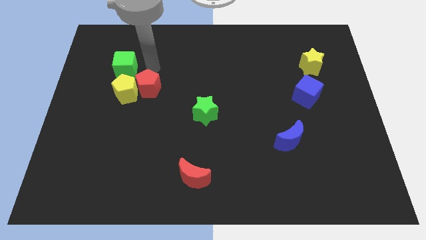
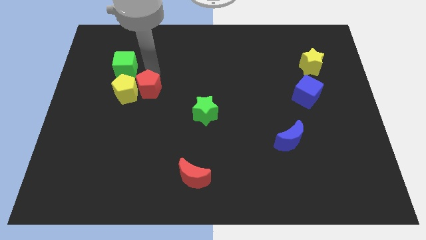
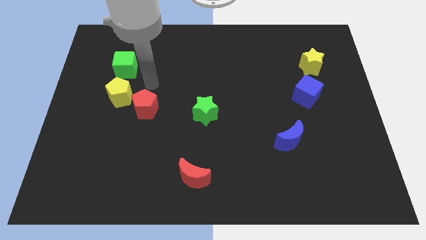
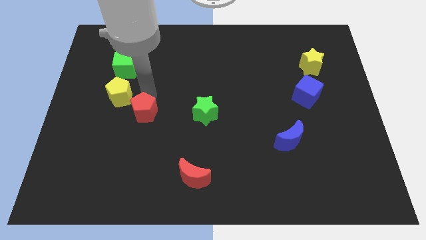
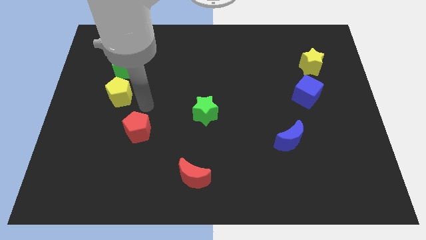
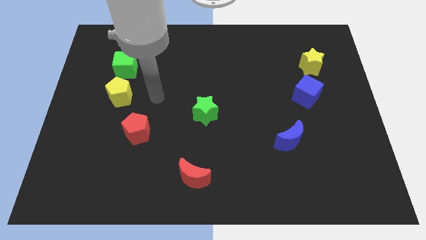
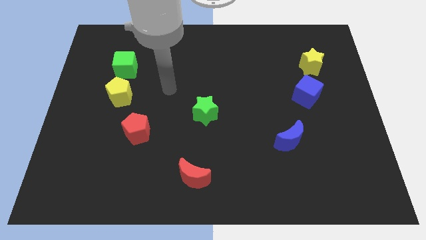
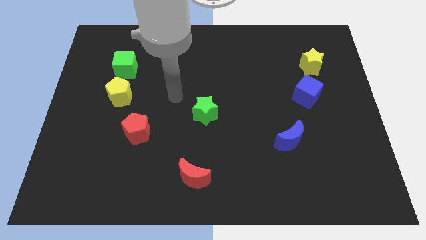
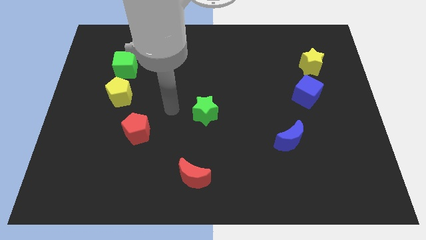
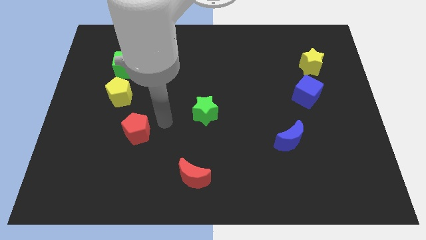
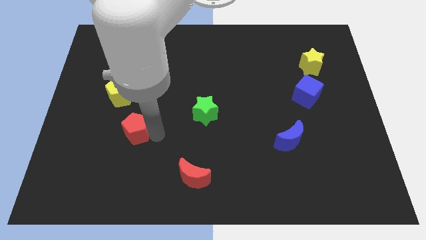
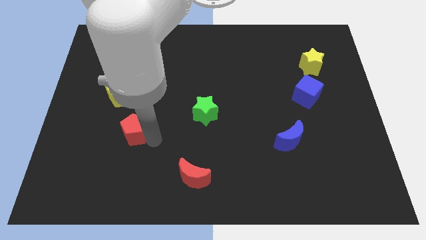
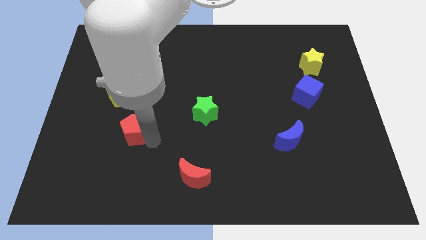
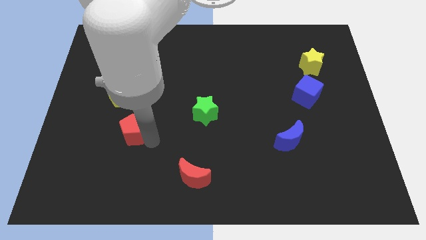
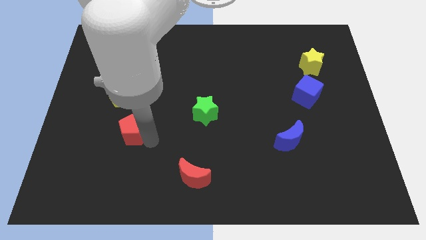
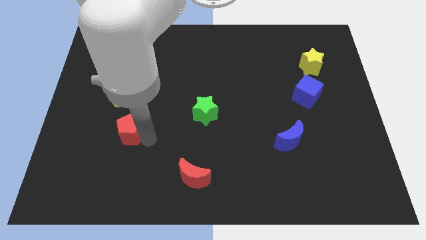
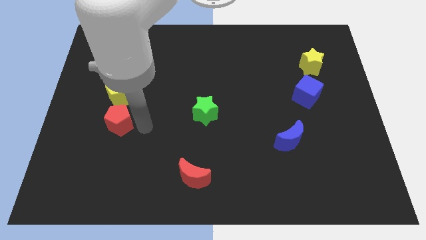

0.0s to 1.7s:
push red pentagon below yellow pentagon

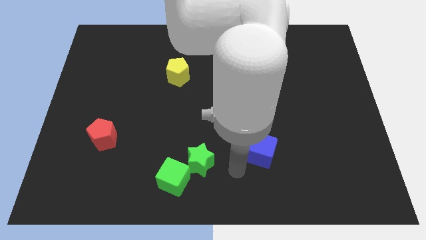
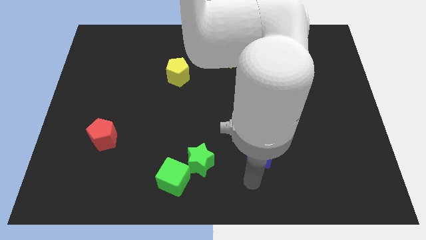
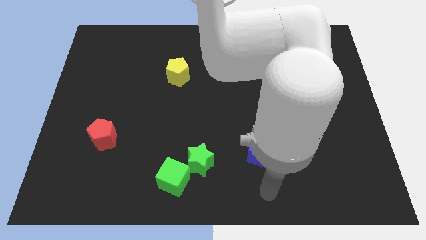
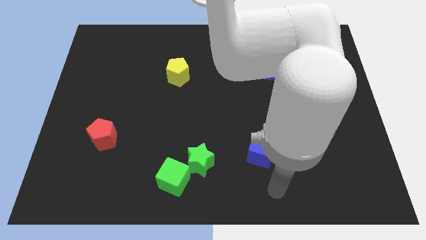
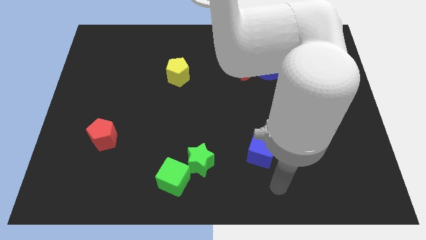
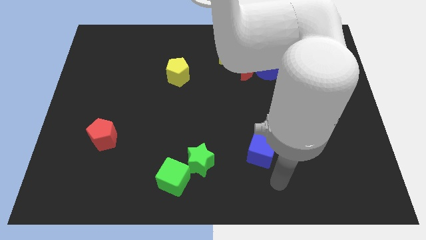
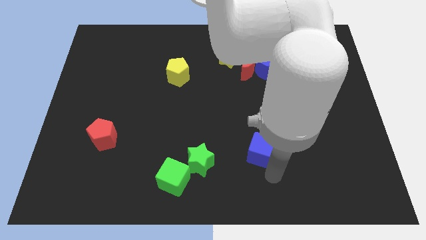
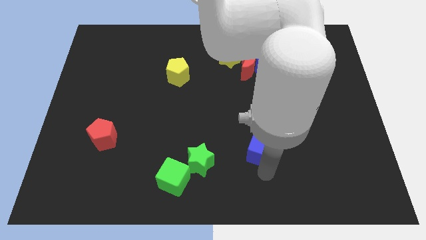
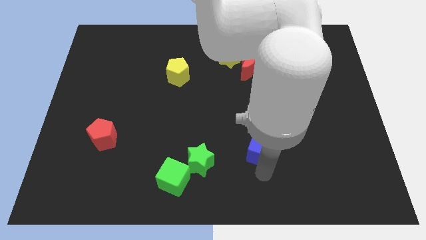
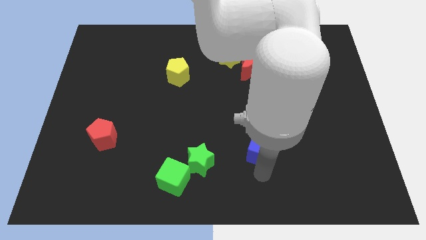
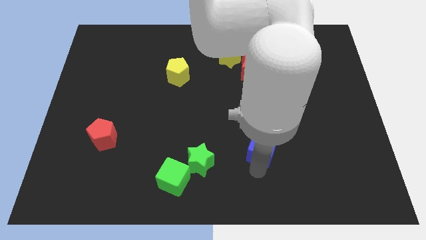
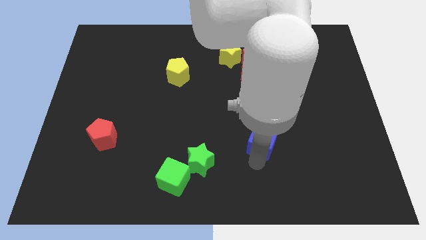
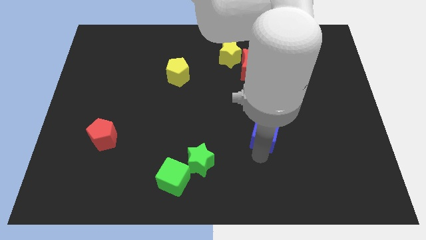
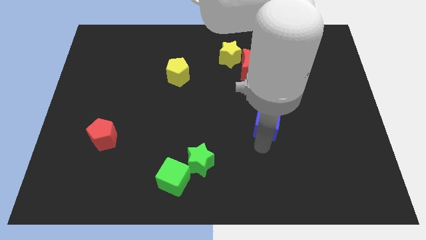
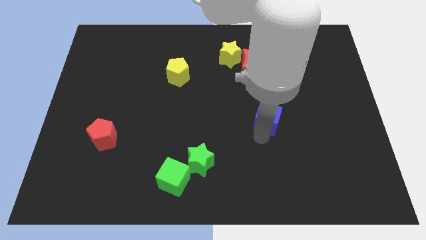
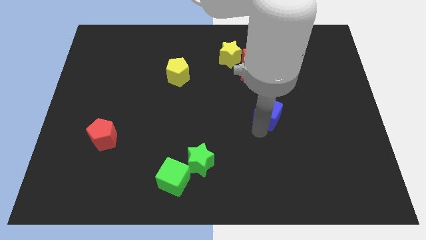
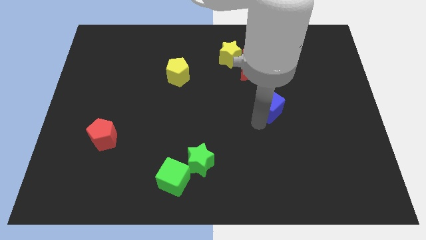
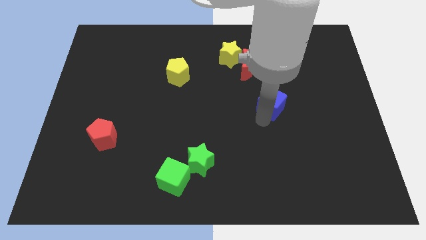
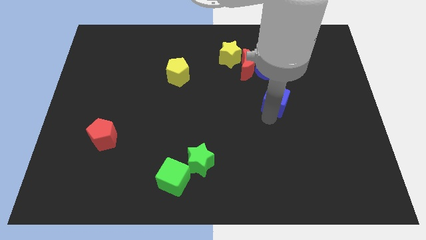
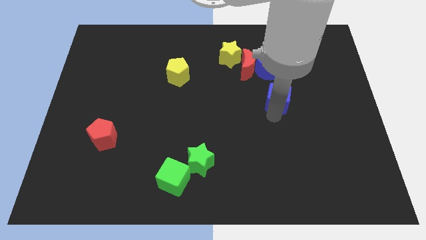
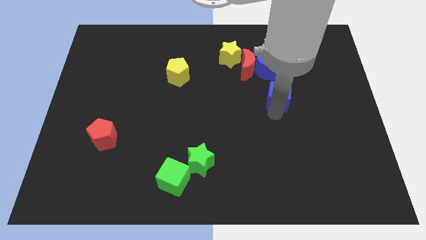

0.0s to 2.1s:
move the blue cube to the bottom of the blue crescent

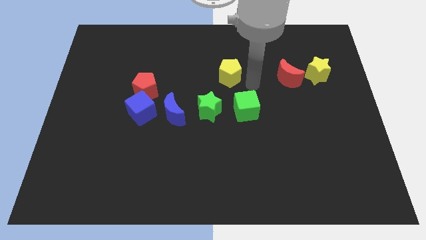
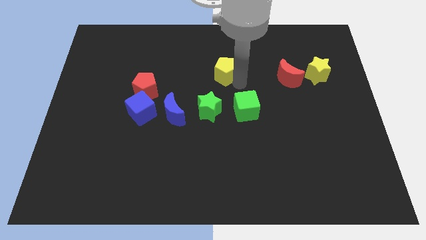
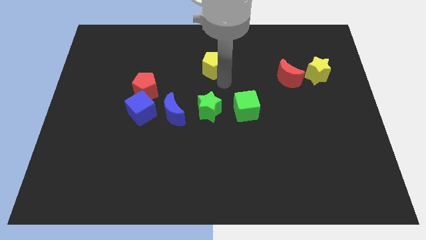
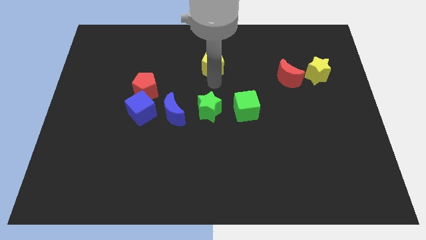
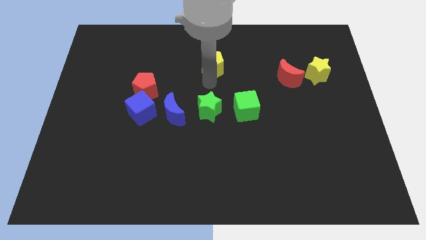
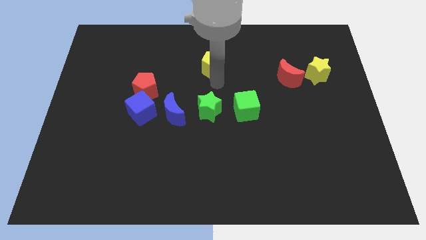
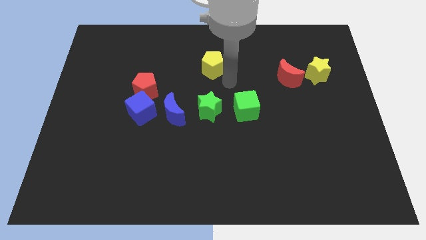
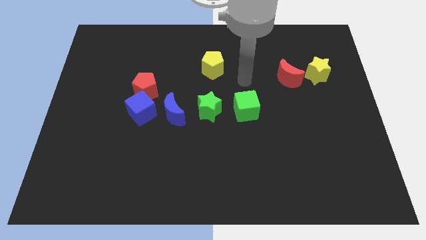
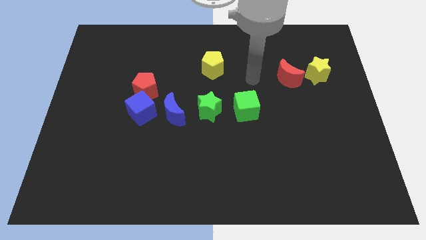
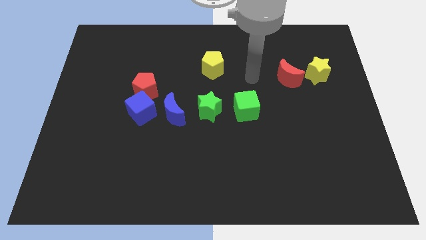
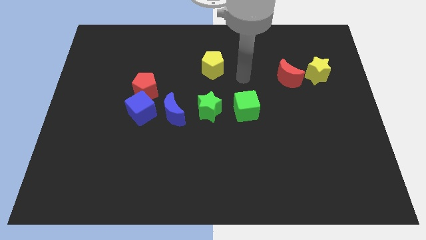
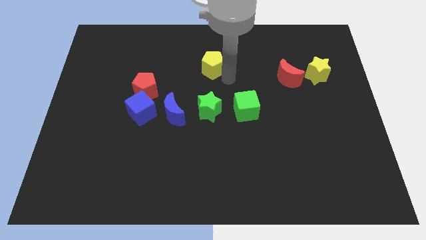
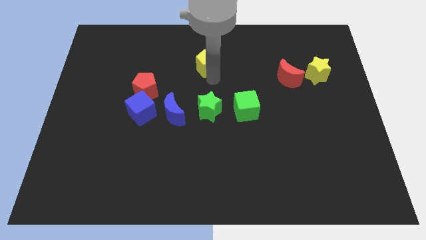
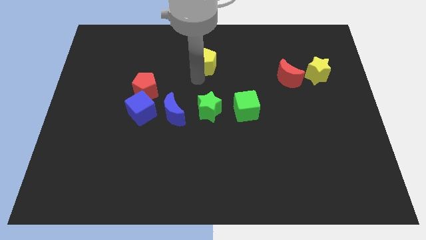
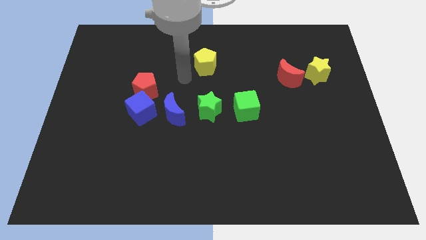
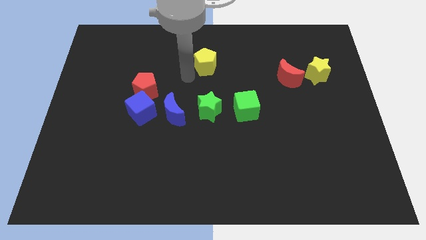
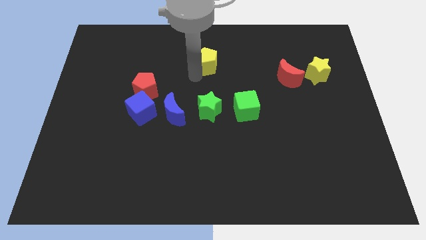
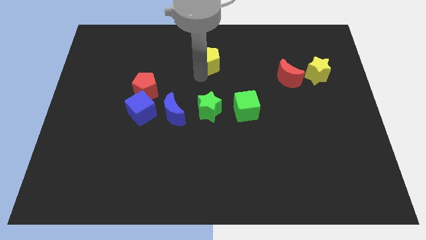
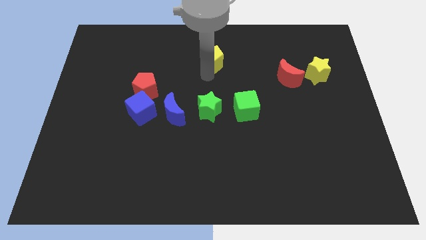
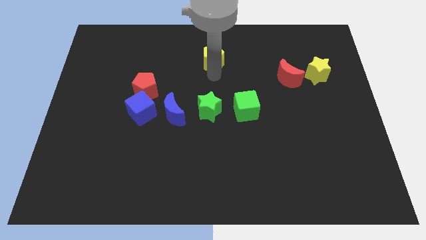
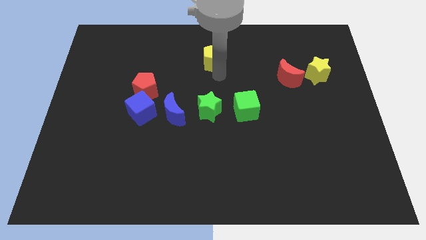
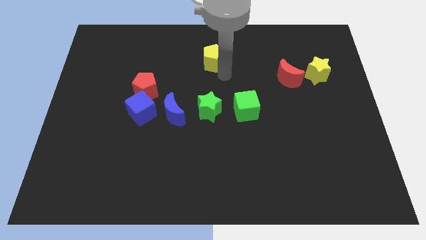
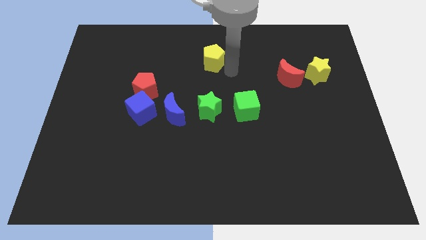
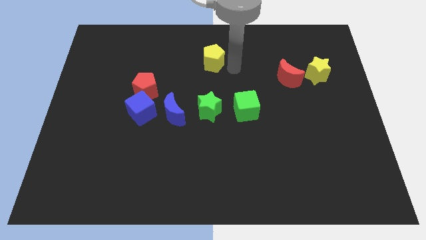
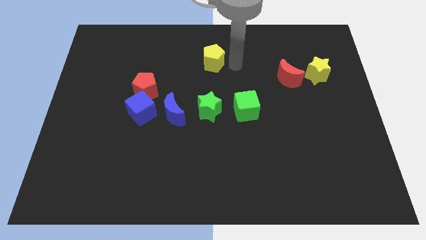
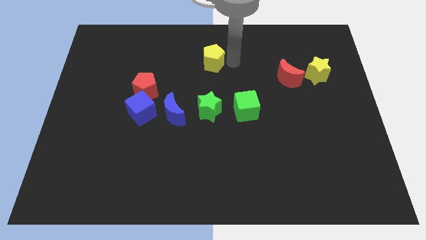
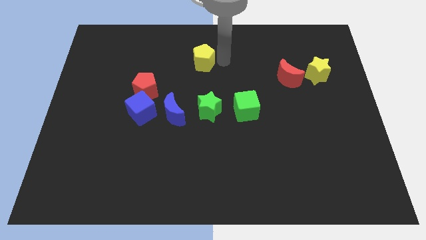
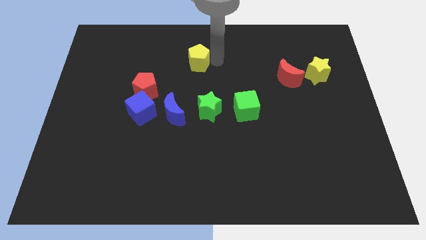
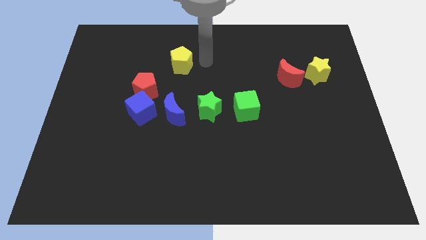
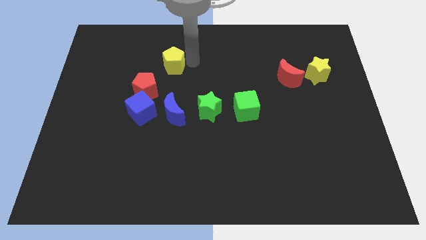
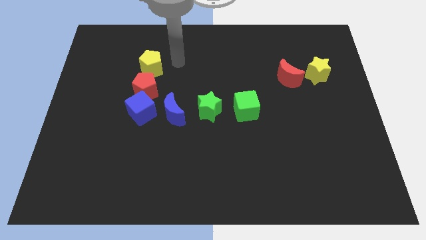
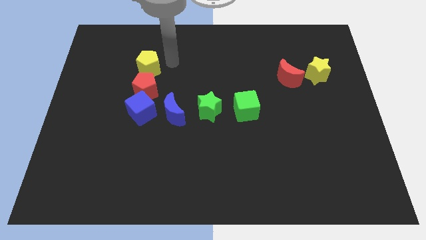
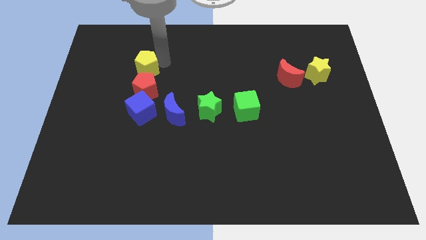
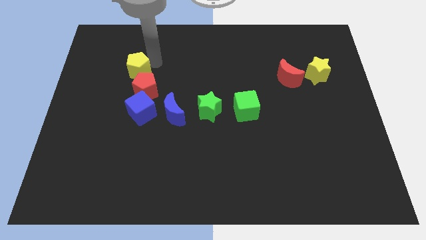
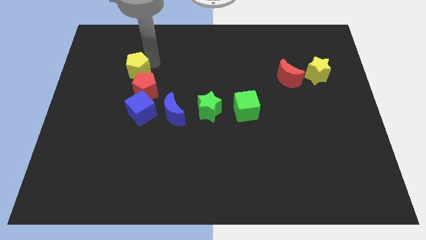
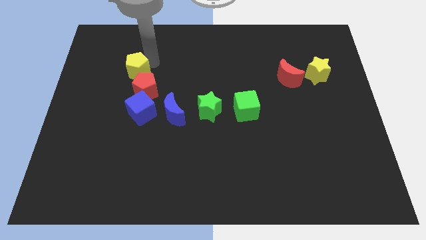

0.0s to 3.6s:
move the yellow pentagon above the red pentagon

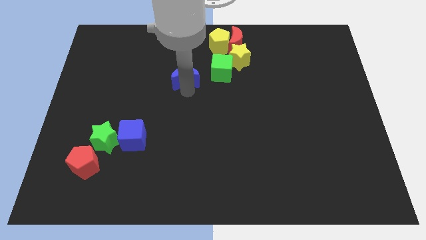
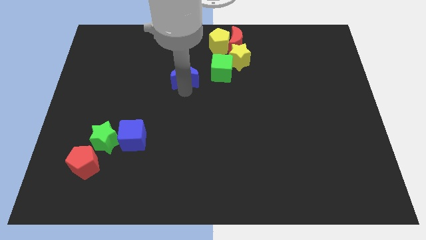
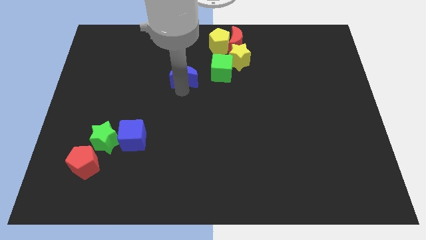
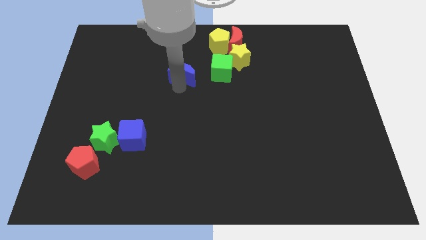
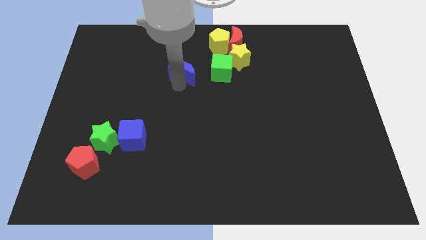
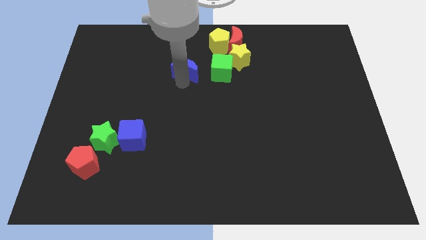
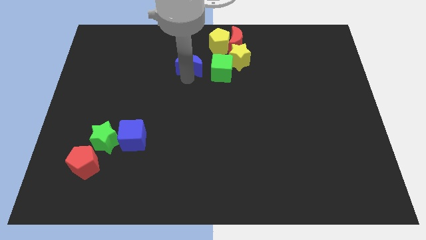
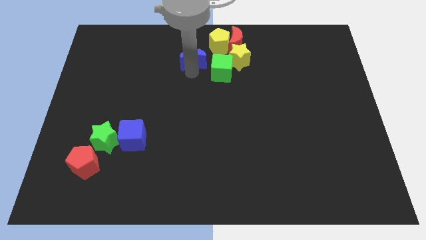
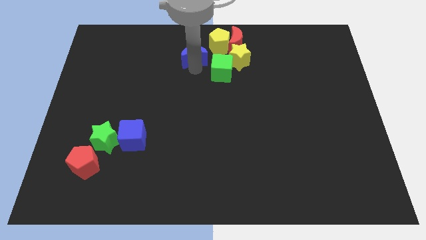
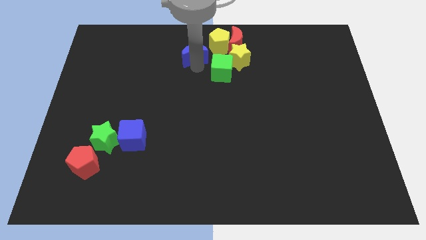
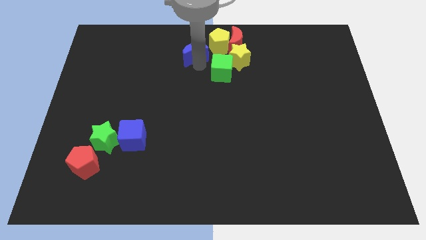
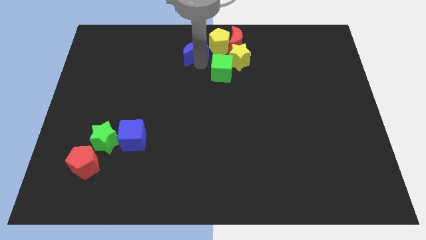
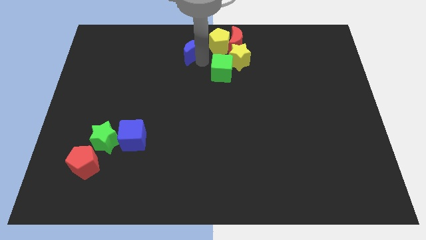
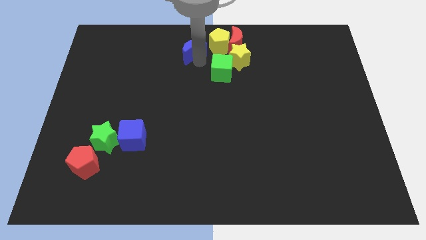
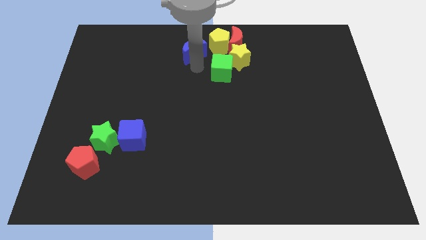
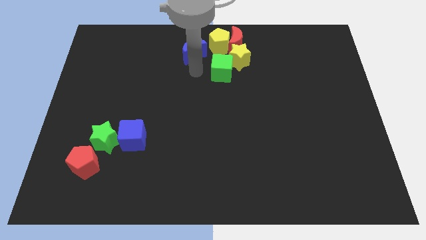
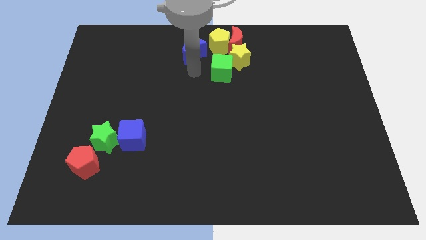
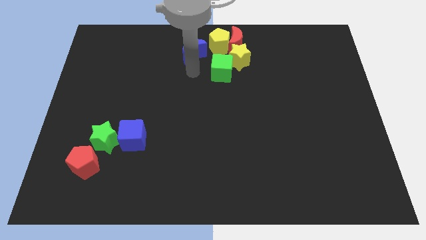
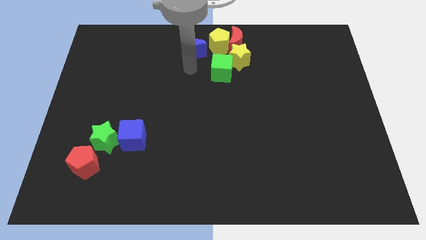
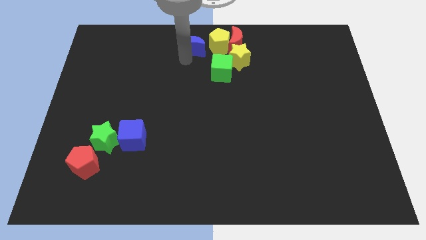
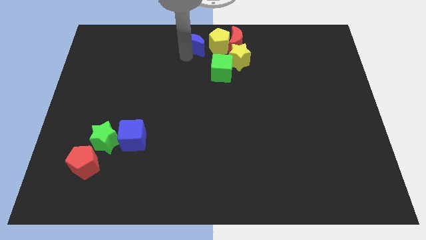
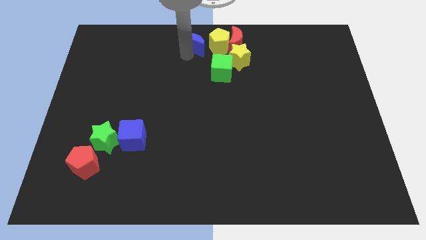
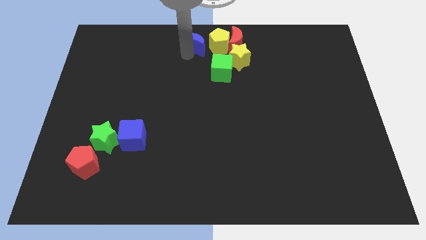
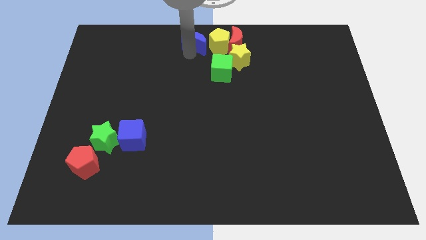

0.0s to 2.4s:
place the blue moon left to the yellow pentagon
